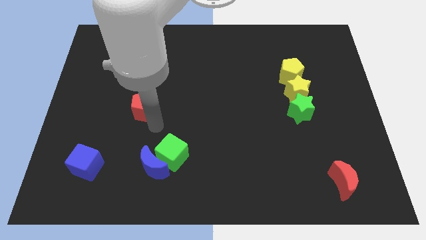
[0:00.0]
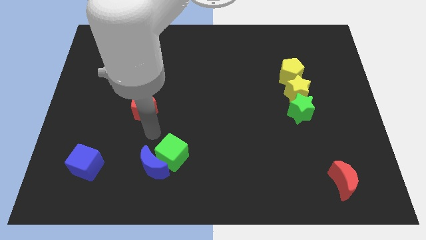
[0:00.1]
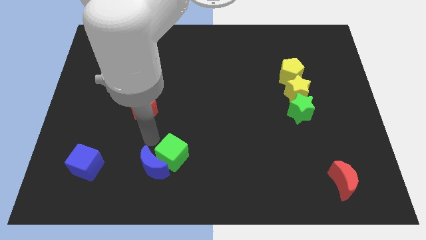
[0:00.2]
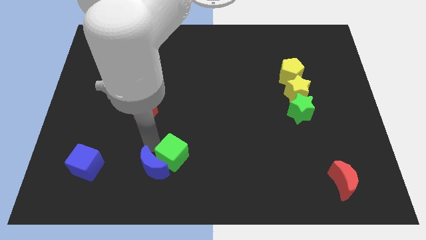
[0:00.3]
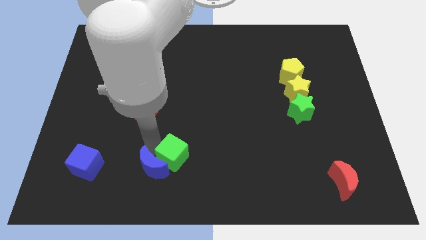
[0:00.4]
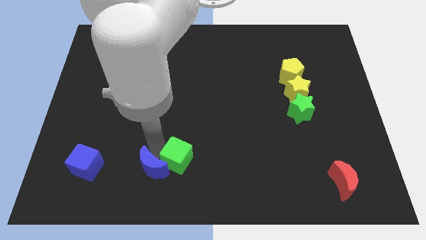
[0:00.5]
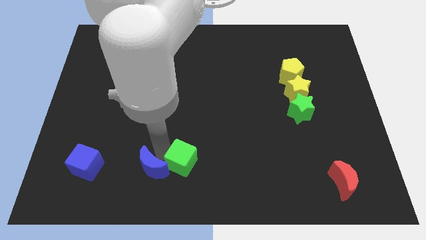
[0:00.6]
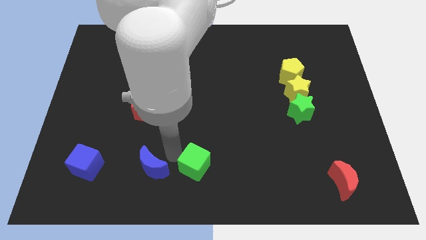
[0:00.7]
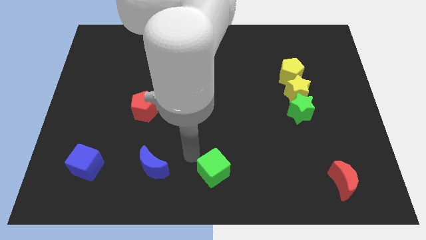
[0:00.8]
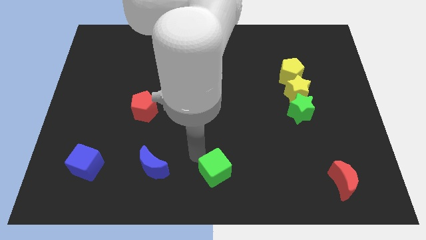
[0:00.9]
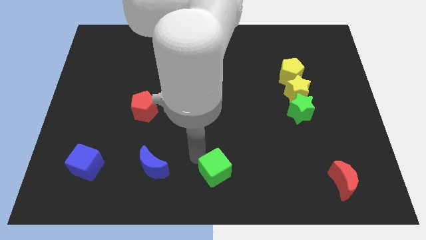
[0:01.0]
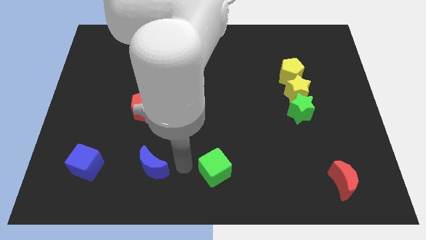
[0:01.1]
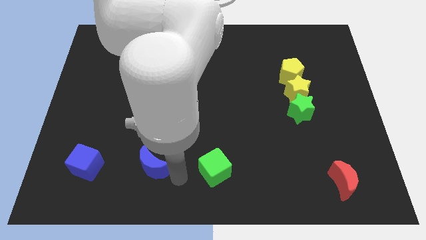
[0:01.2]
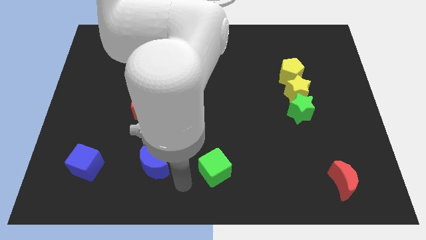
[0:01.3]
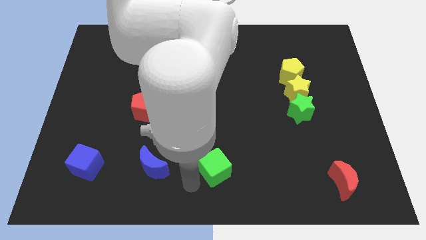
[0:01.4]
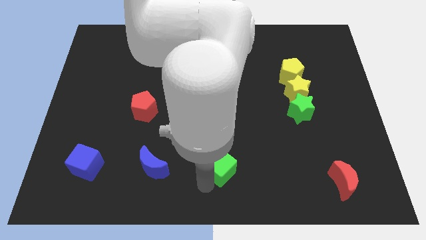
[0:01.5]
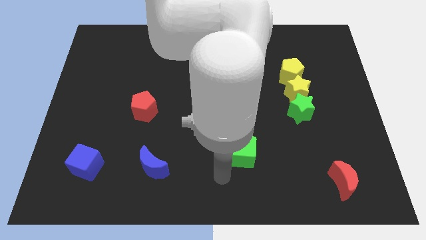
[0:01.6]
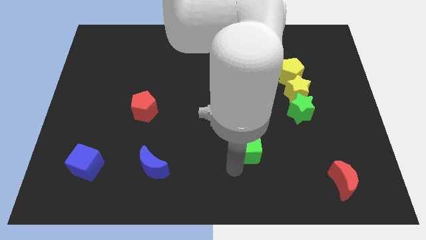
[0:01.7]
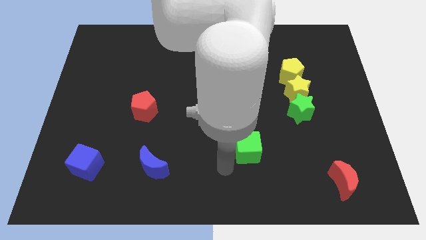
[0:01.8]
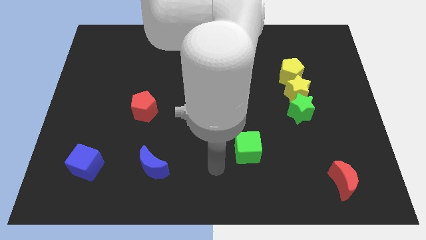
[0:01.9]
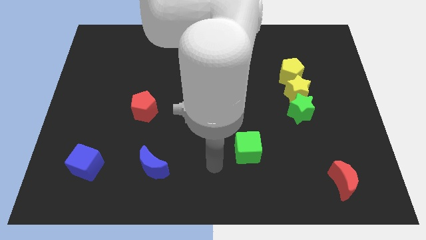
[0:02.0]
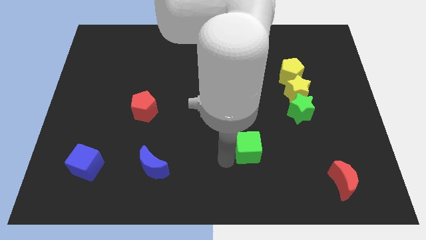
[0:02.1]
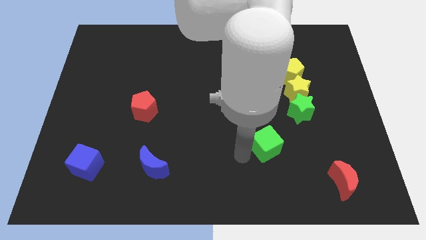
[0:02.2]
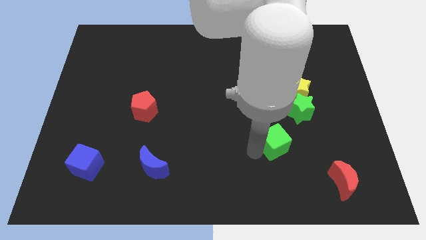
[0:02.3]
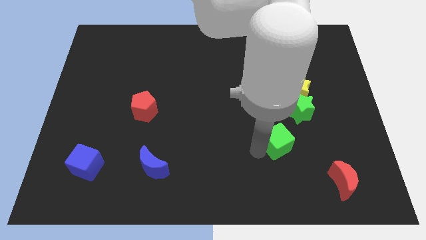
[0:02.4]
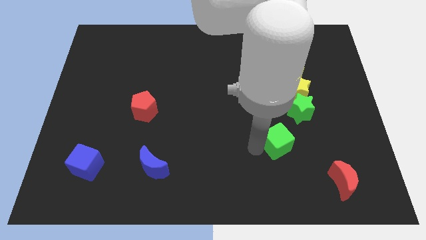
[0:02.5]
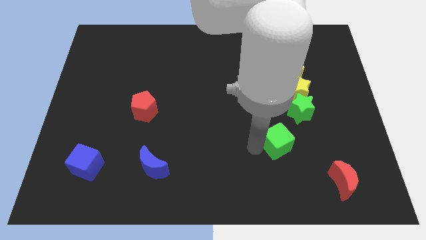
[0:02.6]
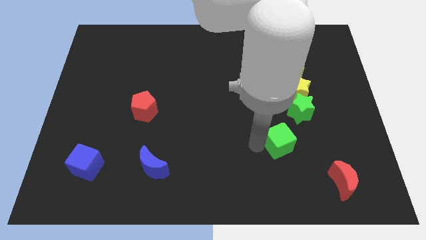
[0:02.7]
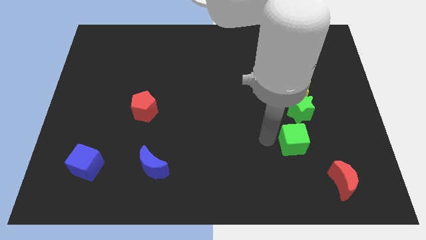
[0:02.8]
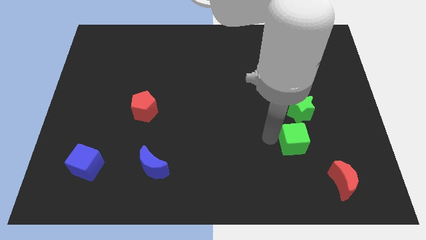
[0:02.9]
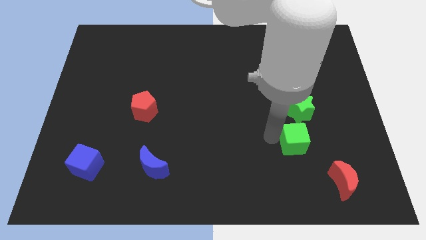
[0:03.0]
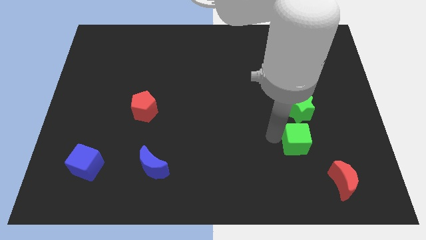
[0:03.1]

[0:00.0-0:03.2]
place the green cube towards the bottom side of the green star

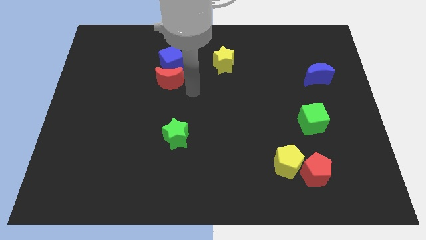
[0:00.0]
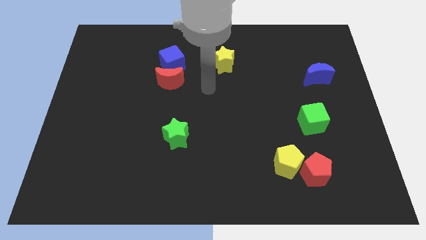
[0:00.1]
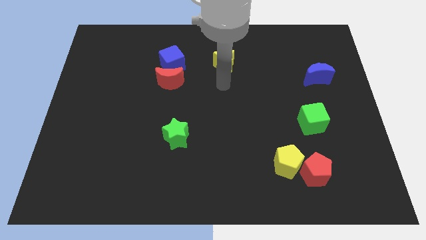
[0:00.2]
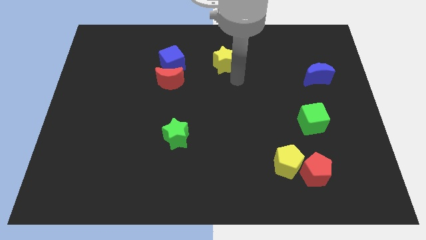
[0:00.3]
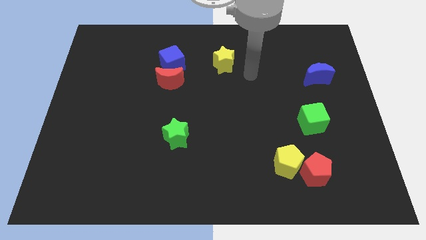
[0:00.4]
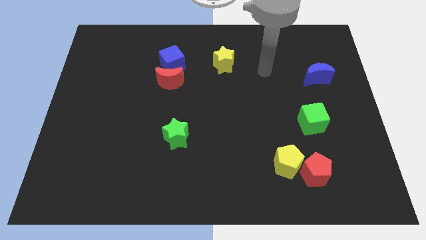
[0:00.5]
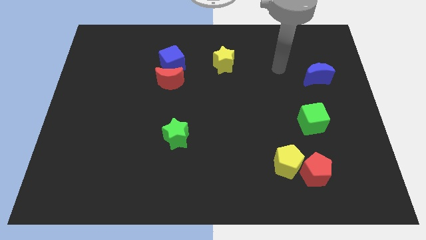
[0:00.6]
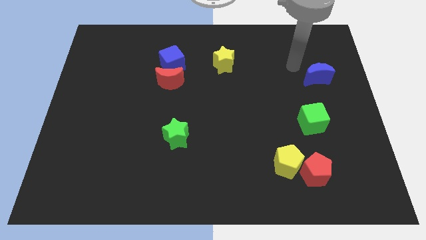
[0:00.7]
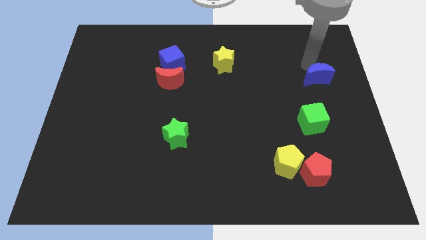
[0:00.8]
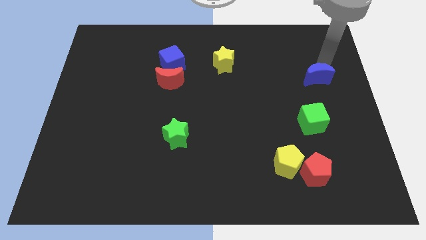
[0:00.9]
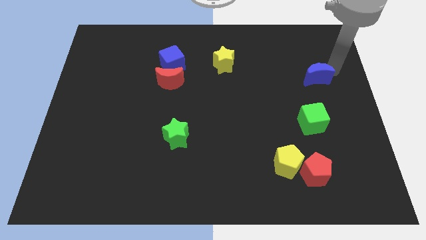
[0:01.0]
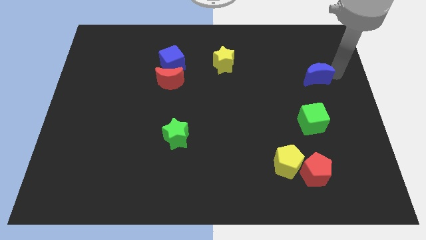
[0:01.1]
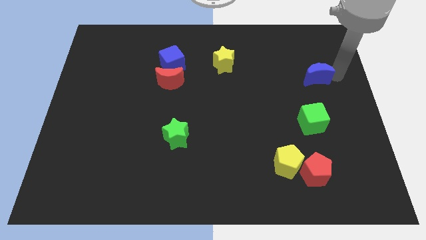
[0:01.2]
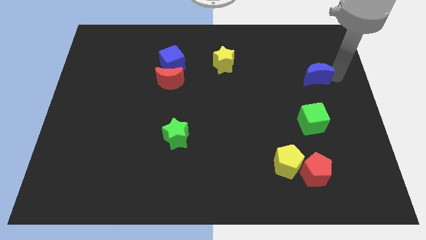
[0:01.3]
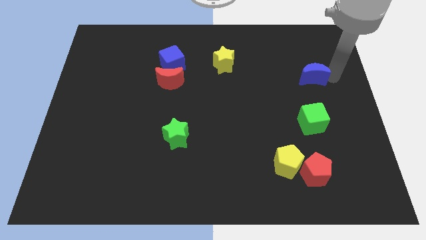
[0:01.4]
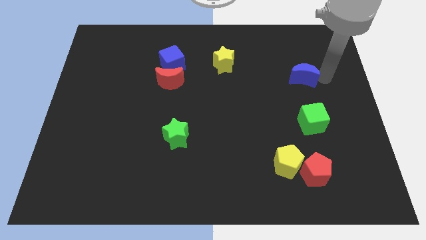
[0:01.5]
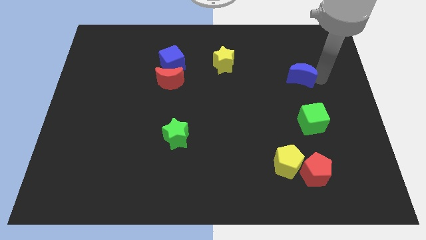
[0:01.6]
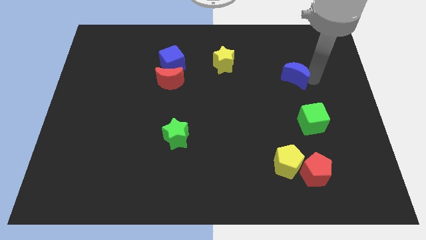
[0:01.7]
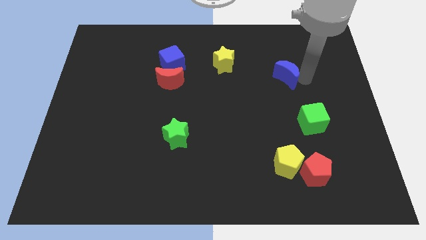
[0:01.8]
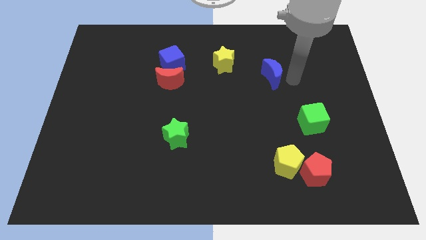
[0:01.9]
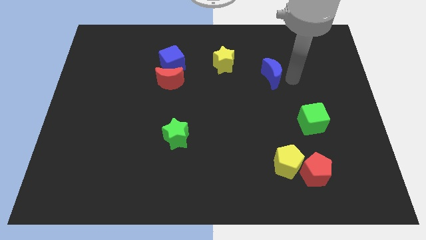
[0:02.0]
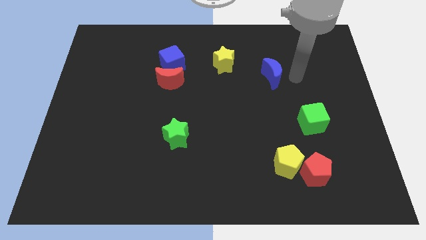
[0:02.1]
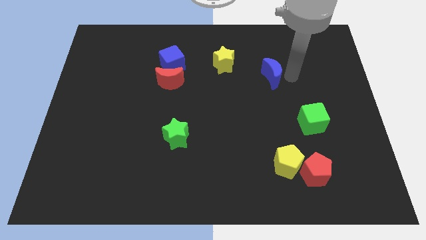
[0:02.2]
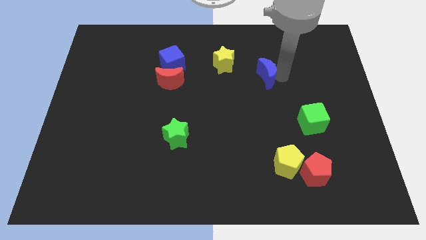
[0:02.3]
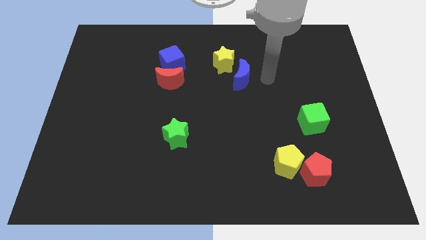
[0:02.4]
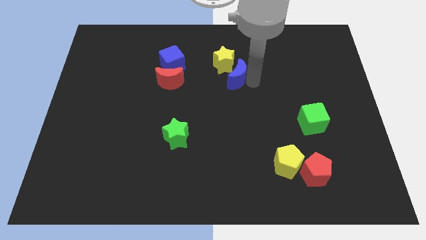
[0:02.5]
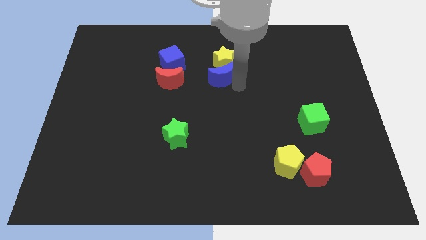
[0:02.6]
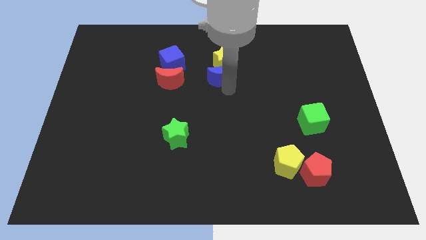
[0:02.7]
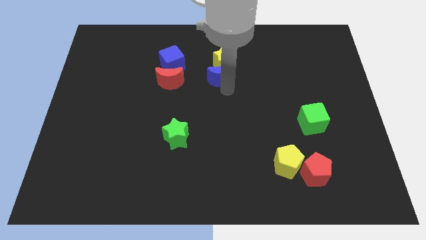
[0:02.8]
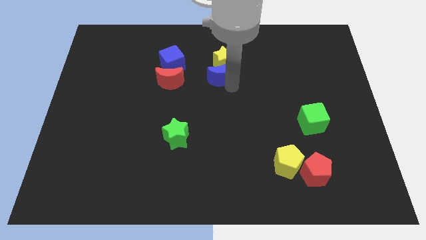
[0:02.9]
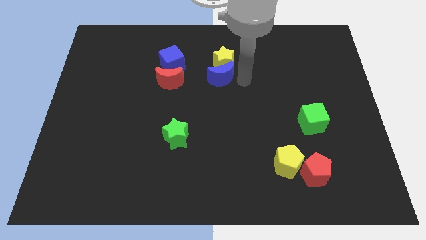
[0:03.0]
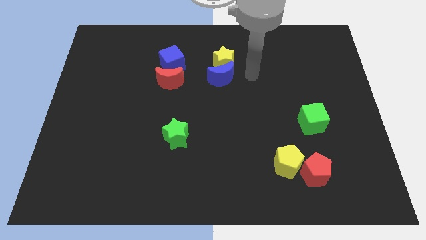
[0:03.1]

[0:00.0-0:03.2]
place the blue crescent under the yellow star

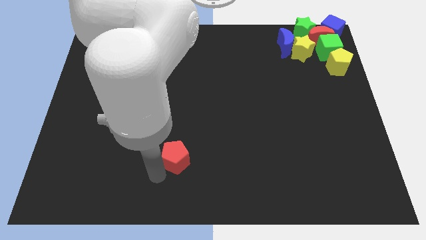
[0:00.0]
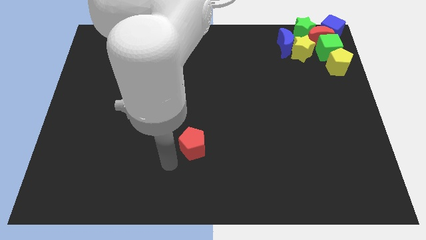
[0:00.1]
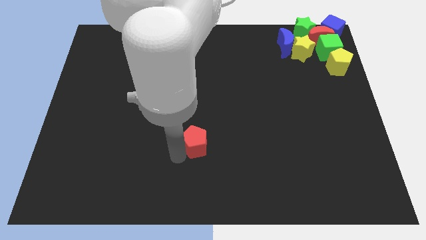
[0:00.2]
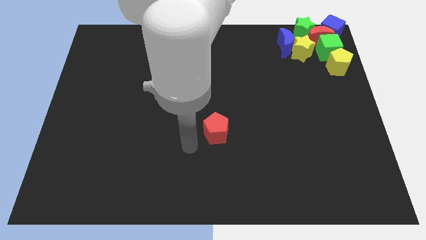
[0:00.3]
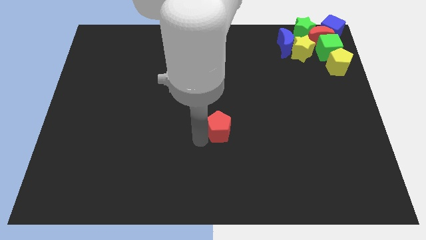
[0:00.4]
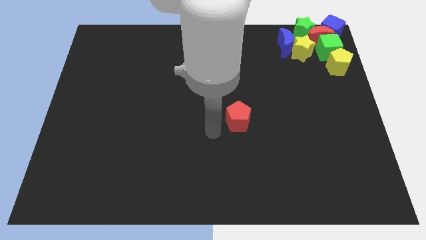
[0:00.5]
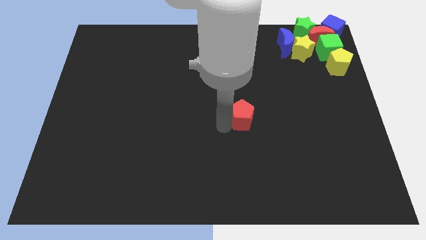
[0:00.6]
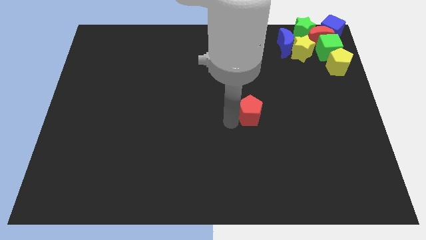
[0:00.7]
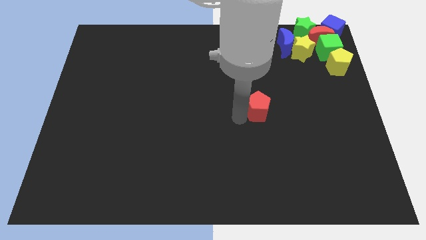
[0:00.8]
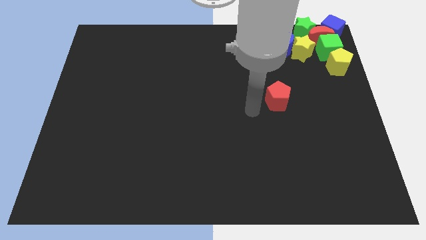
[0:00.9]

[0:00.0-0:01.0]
move the red pentagon towards the right center of the board

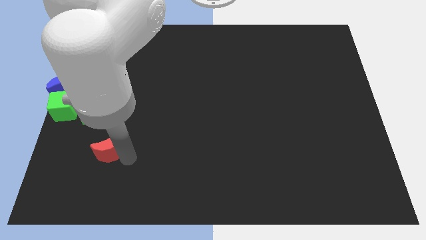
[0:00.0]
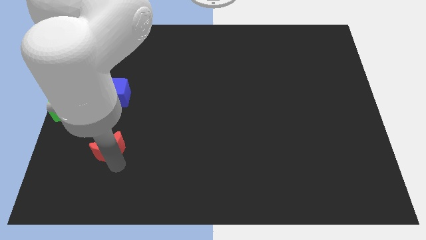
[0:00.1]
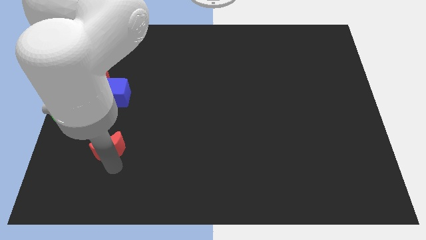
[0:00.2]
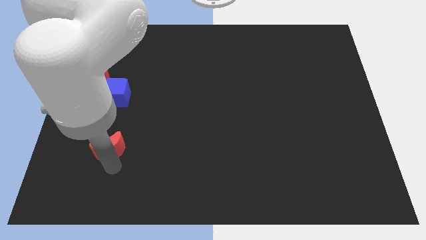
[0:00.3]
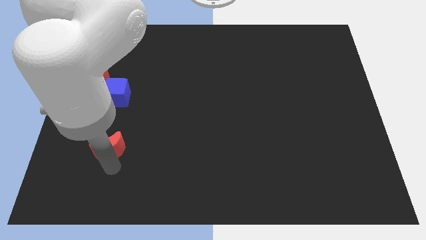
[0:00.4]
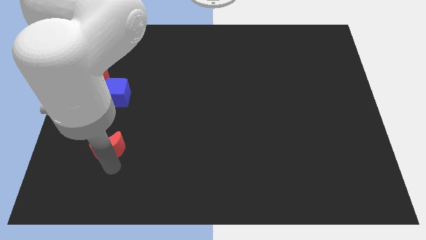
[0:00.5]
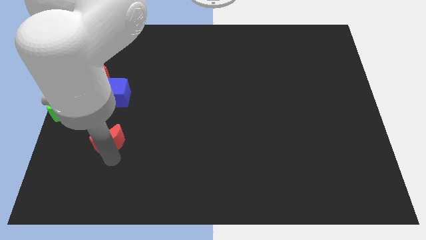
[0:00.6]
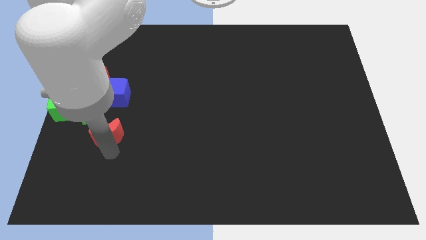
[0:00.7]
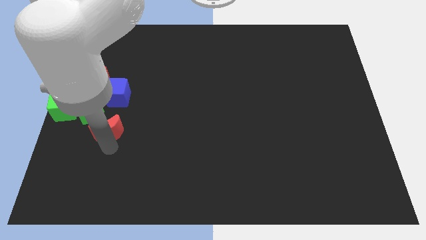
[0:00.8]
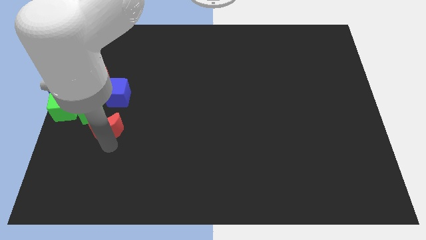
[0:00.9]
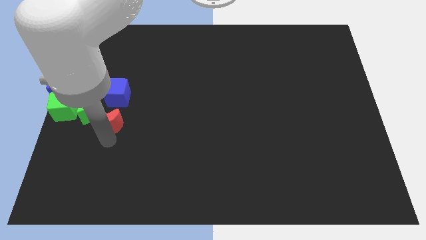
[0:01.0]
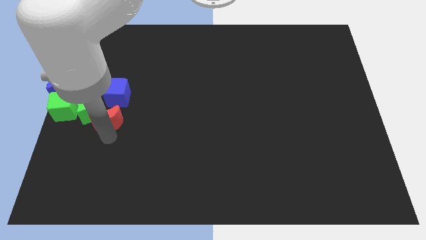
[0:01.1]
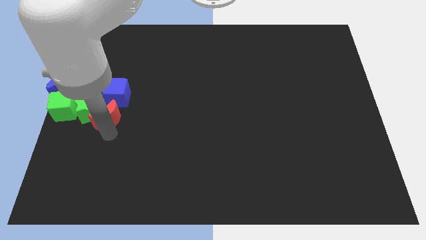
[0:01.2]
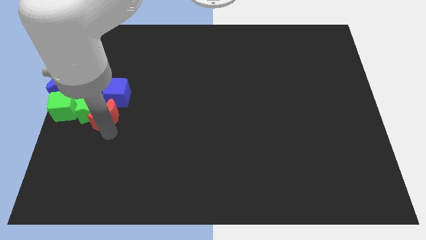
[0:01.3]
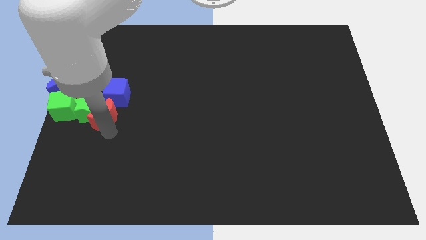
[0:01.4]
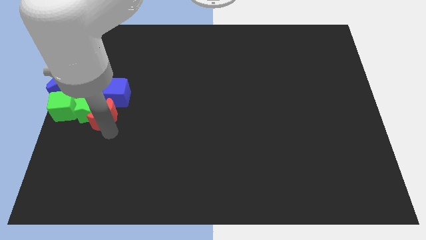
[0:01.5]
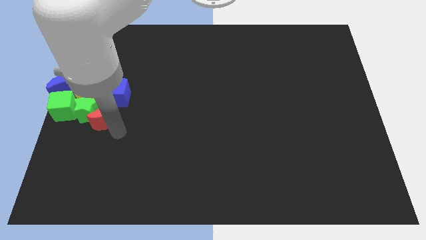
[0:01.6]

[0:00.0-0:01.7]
move the red crescent into the green star
